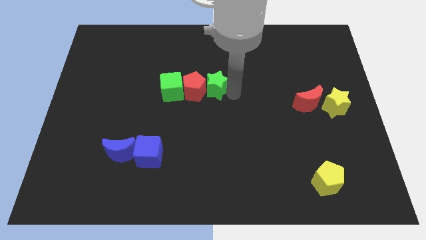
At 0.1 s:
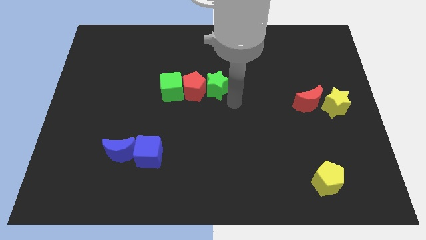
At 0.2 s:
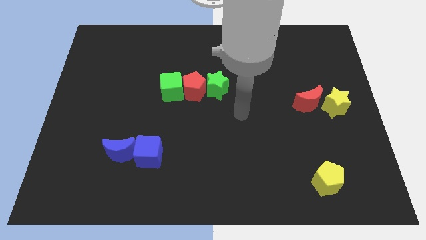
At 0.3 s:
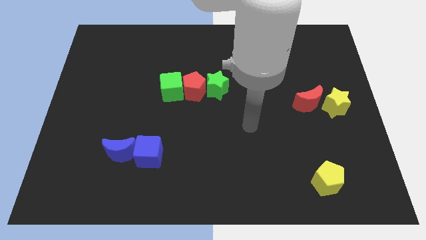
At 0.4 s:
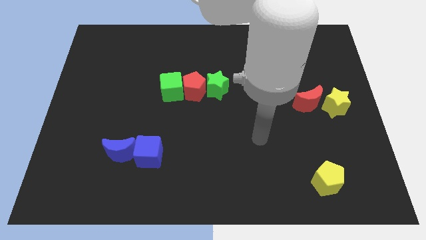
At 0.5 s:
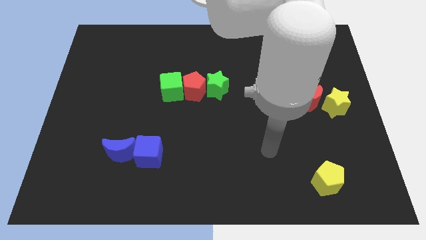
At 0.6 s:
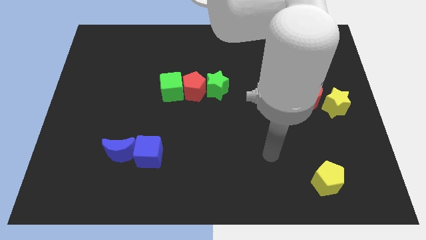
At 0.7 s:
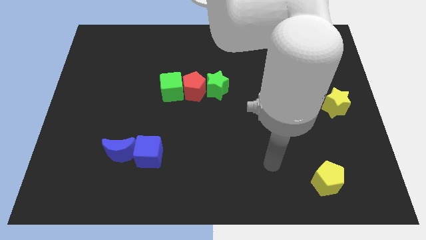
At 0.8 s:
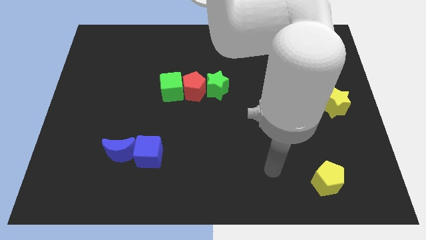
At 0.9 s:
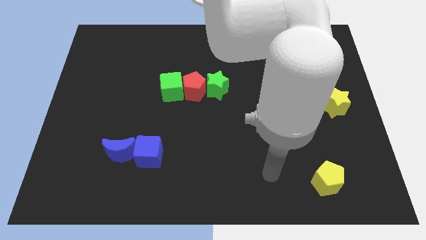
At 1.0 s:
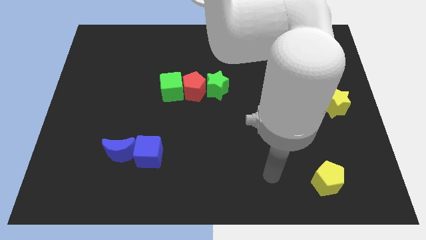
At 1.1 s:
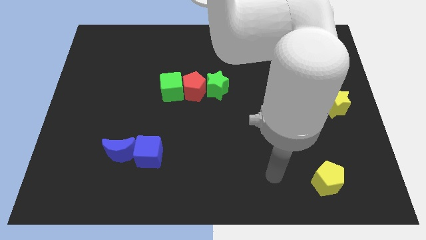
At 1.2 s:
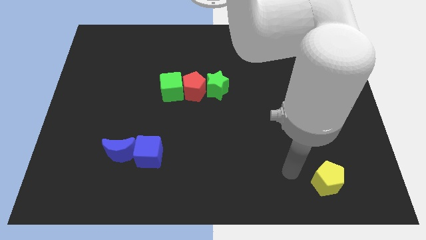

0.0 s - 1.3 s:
move your arm away from the green star

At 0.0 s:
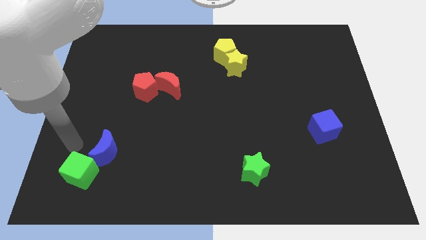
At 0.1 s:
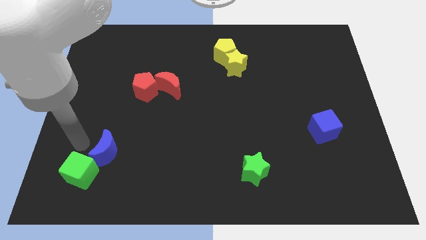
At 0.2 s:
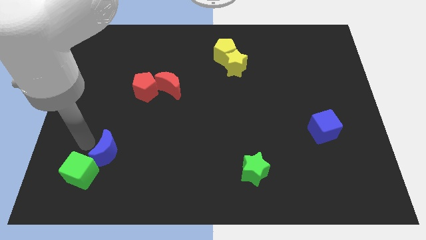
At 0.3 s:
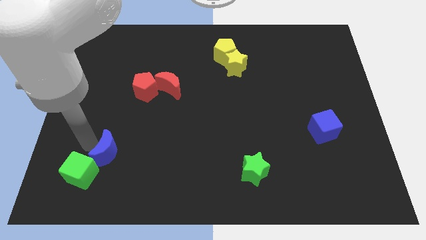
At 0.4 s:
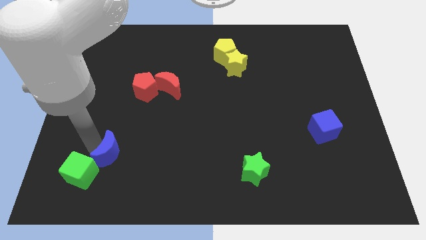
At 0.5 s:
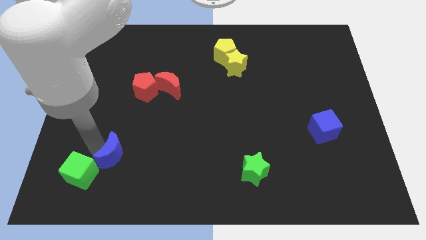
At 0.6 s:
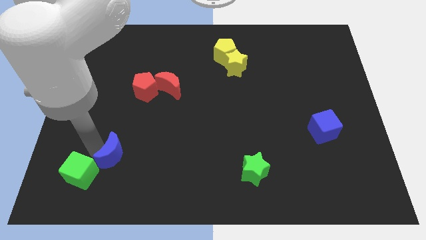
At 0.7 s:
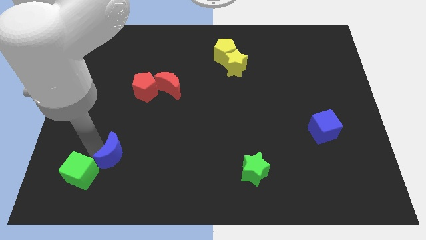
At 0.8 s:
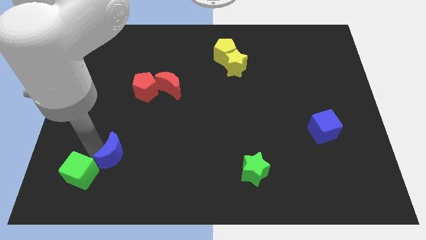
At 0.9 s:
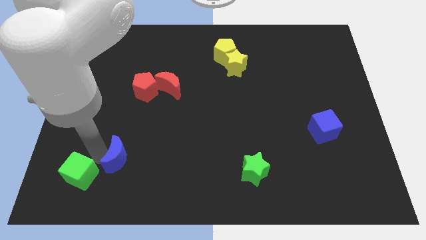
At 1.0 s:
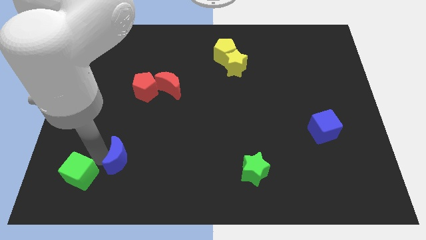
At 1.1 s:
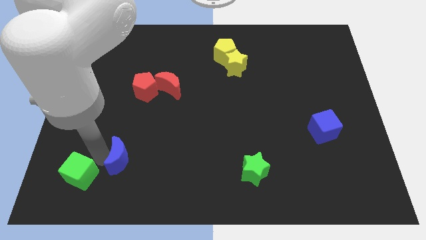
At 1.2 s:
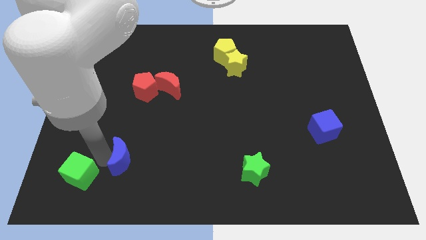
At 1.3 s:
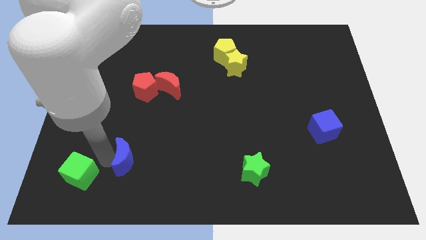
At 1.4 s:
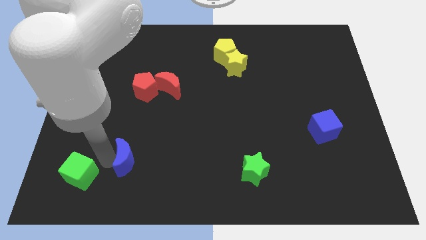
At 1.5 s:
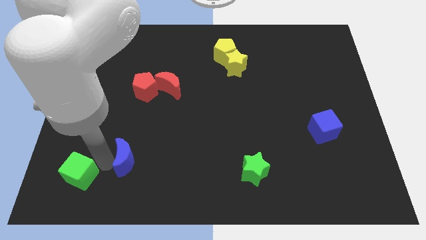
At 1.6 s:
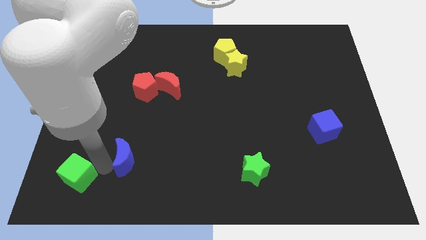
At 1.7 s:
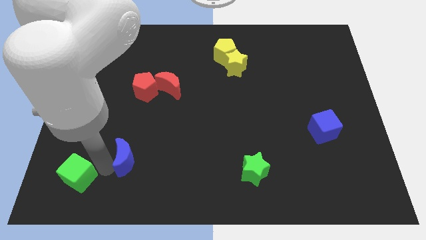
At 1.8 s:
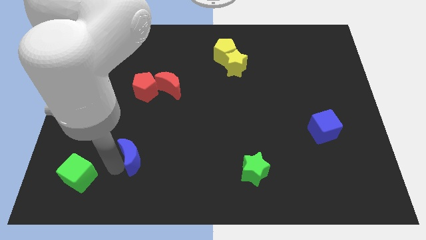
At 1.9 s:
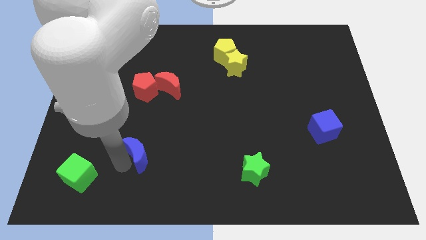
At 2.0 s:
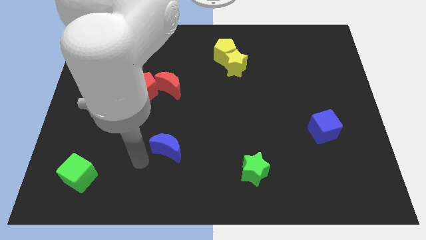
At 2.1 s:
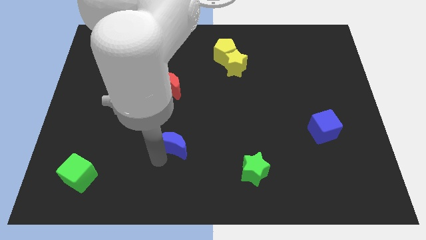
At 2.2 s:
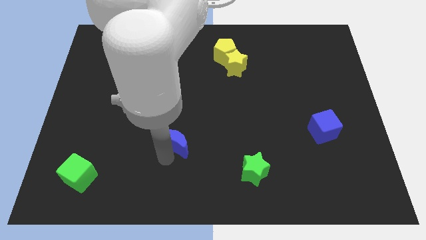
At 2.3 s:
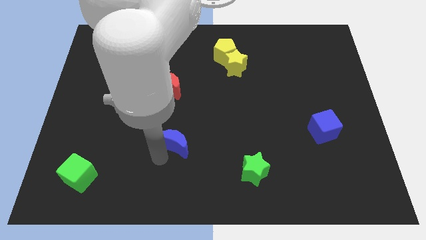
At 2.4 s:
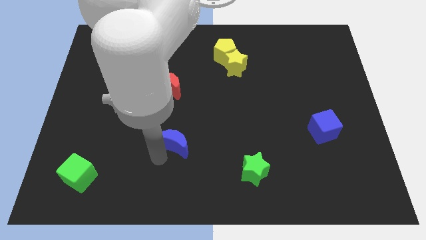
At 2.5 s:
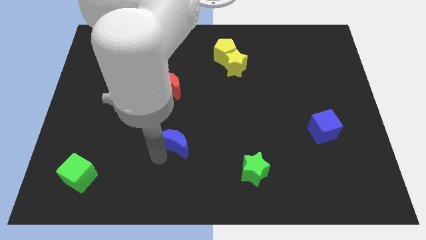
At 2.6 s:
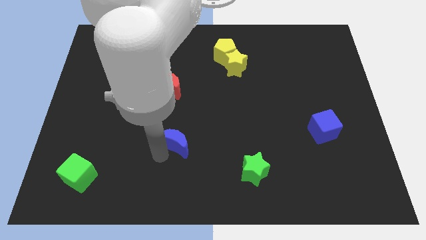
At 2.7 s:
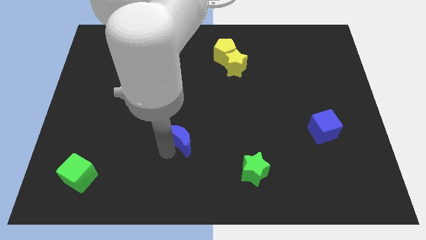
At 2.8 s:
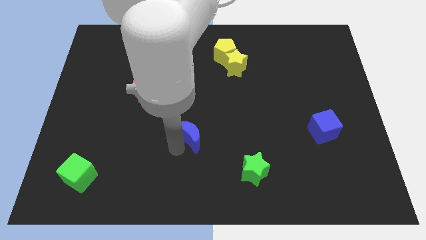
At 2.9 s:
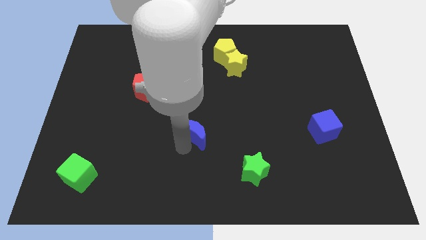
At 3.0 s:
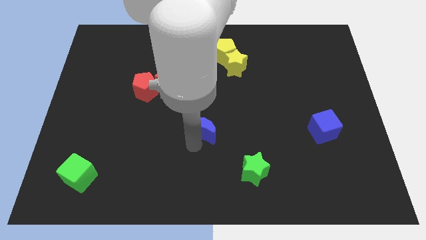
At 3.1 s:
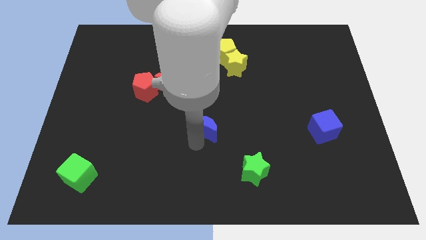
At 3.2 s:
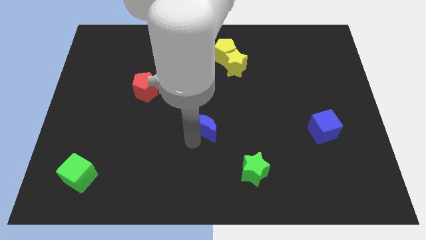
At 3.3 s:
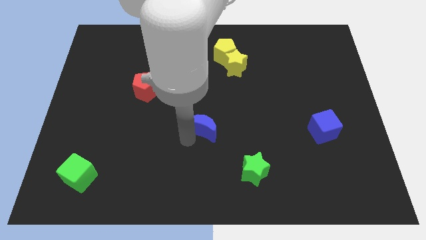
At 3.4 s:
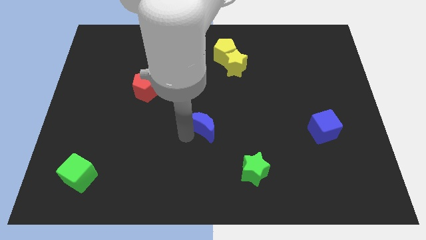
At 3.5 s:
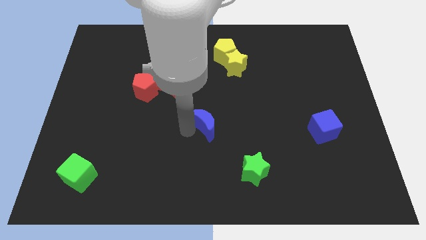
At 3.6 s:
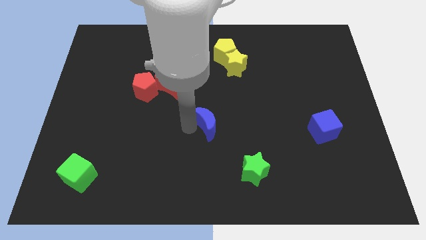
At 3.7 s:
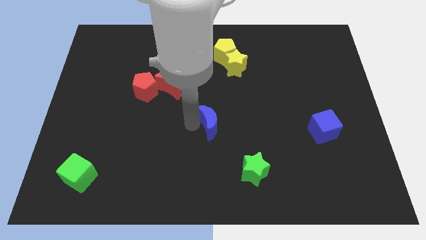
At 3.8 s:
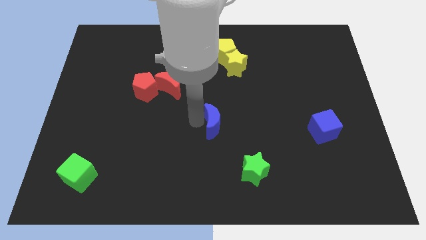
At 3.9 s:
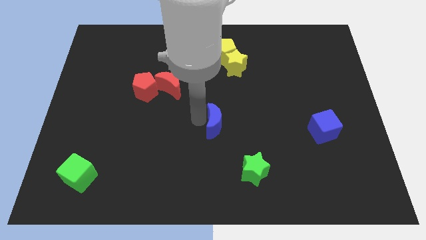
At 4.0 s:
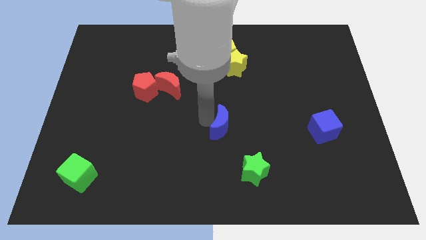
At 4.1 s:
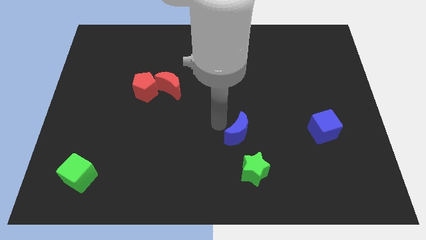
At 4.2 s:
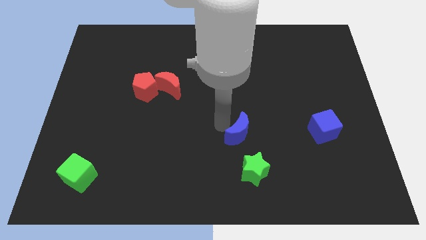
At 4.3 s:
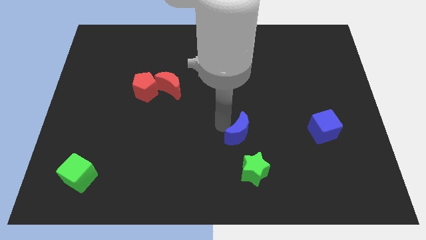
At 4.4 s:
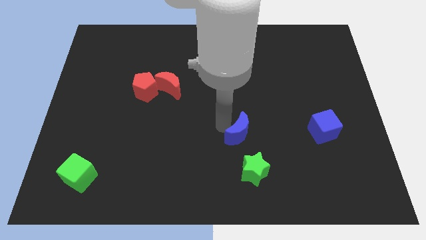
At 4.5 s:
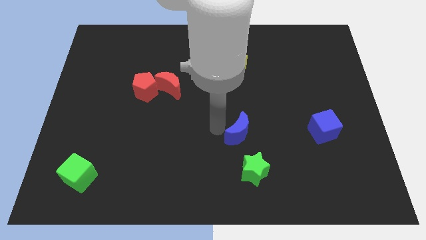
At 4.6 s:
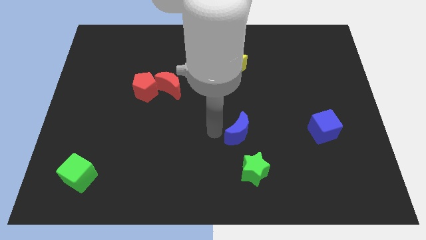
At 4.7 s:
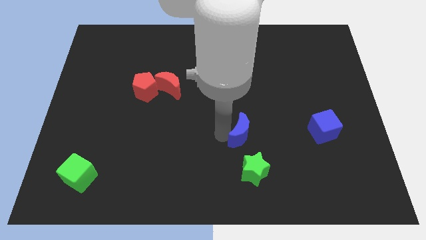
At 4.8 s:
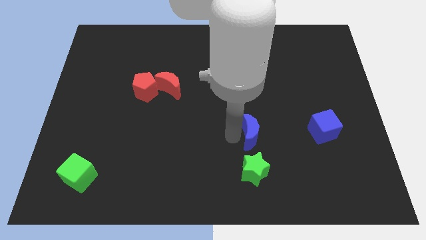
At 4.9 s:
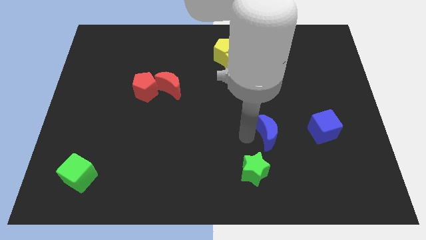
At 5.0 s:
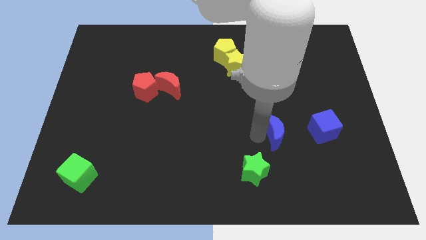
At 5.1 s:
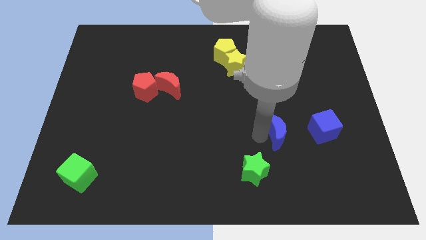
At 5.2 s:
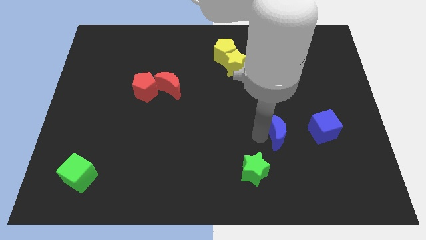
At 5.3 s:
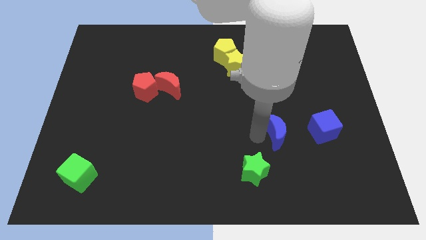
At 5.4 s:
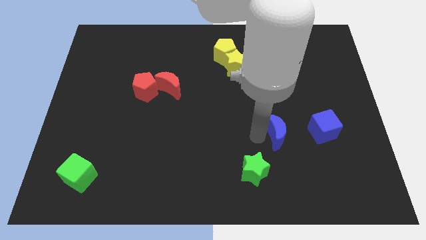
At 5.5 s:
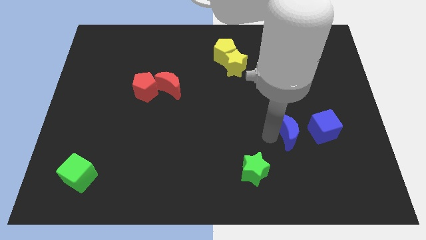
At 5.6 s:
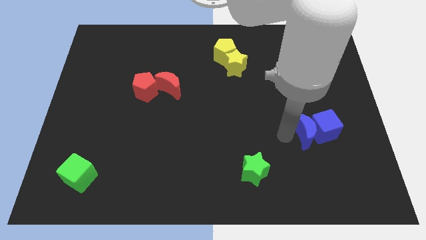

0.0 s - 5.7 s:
move blue crescent towards the blue cube

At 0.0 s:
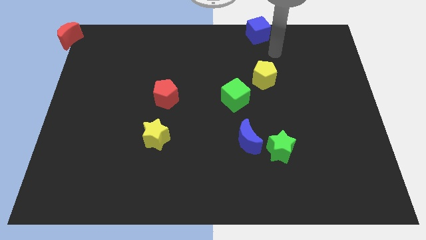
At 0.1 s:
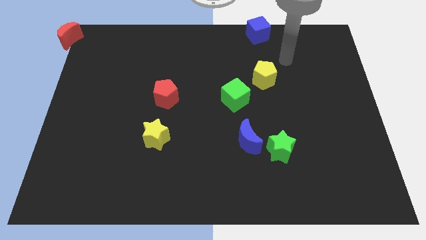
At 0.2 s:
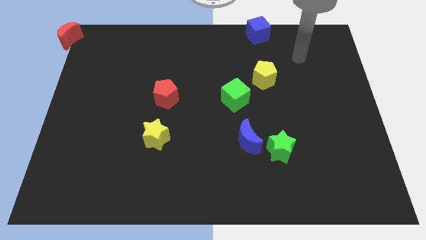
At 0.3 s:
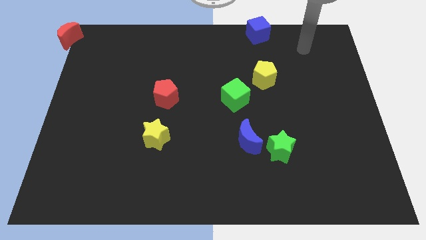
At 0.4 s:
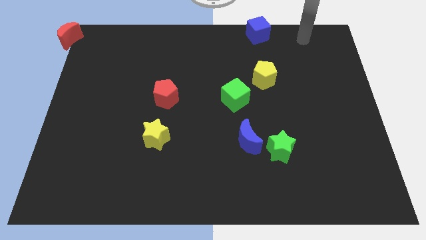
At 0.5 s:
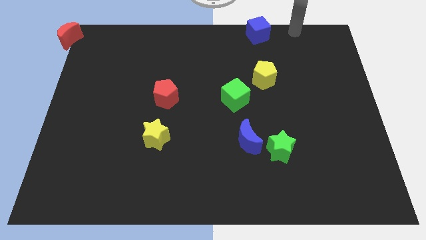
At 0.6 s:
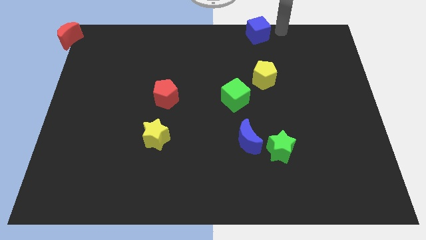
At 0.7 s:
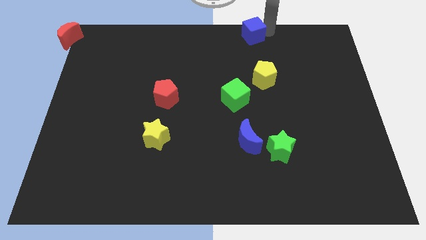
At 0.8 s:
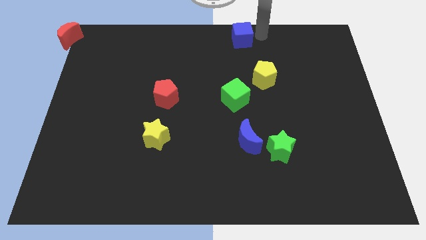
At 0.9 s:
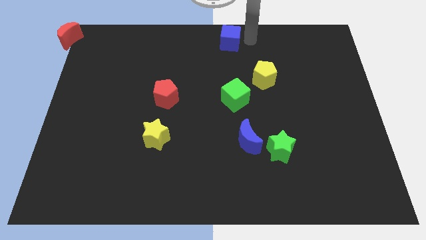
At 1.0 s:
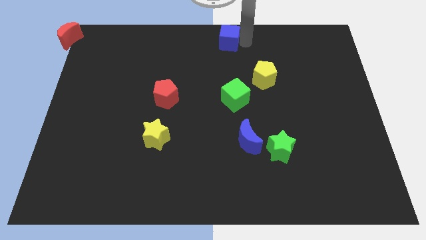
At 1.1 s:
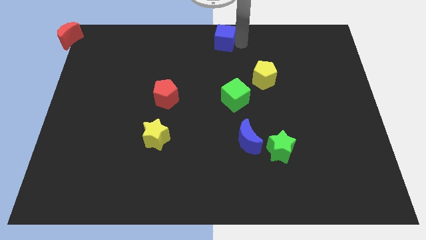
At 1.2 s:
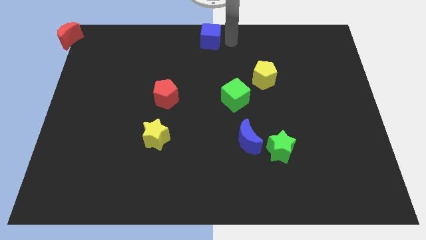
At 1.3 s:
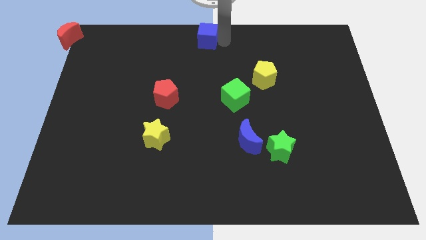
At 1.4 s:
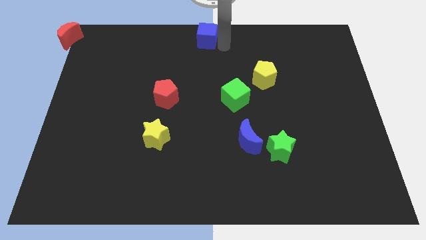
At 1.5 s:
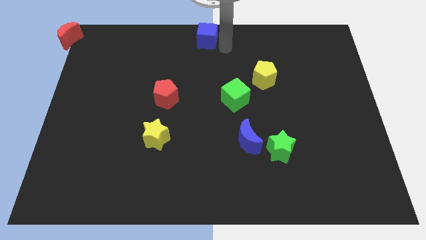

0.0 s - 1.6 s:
place the blue cube at the top center

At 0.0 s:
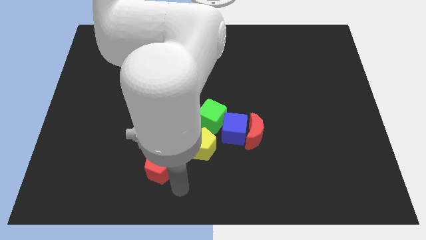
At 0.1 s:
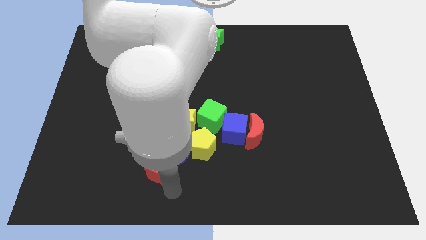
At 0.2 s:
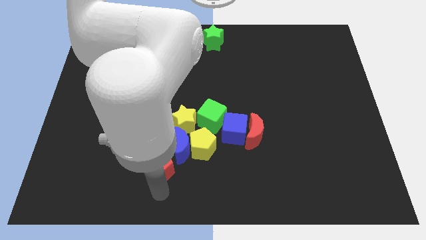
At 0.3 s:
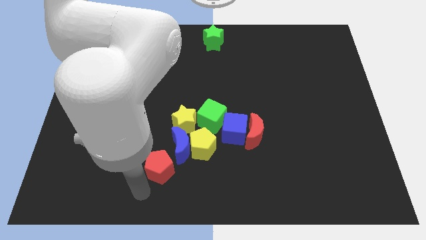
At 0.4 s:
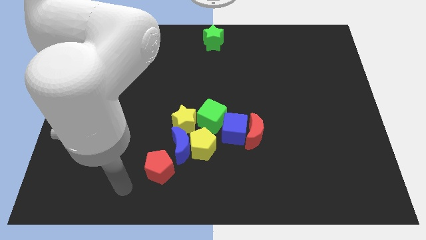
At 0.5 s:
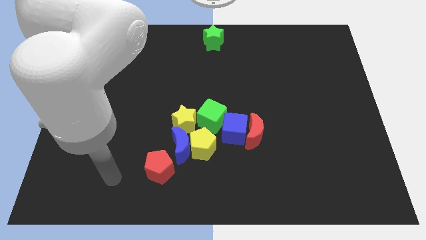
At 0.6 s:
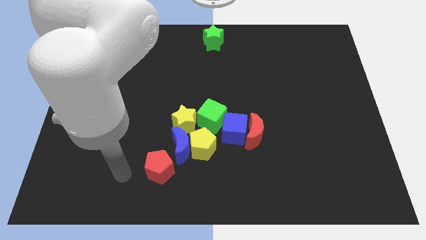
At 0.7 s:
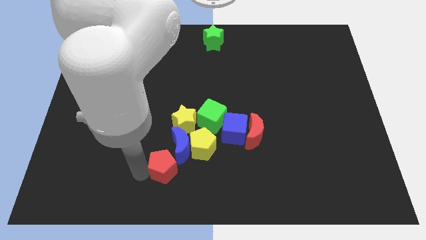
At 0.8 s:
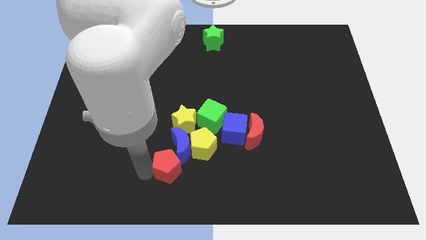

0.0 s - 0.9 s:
place the arm left to the red pentagon
